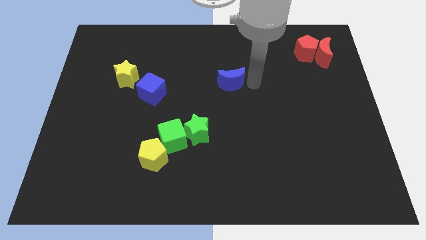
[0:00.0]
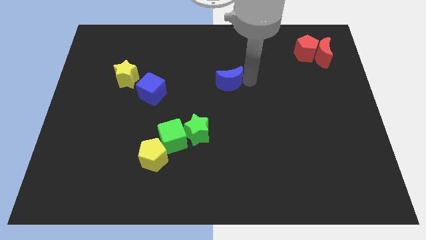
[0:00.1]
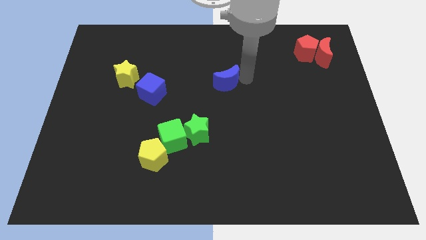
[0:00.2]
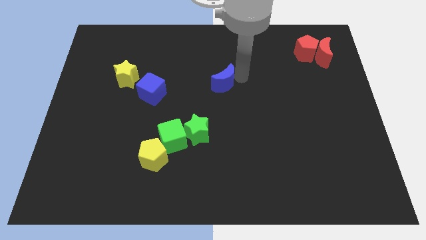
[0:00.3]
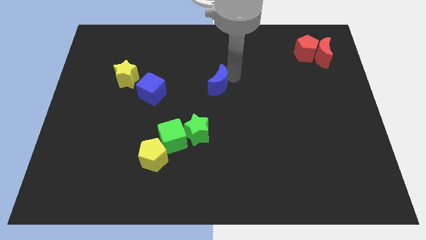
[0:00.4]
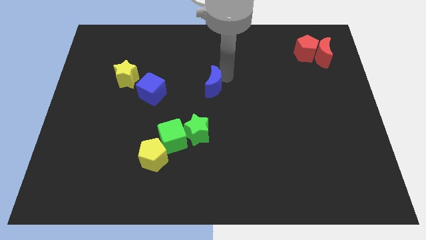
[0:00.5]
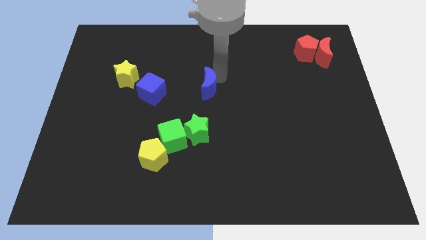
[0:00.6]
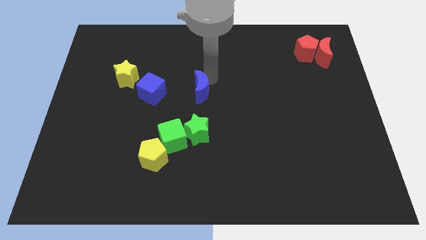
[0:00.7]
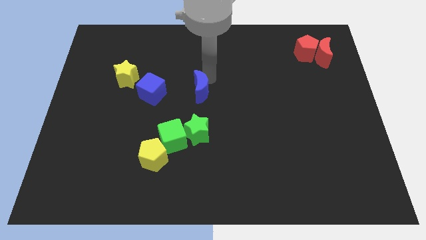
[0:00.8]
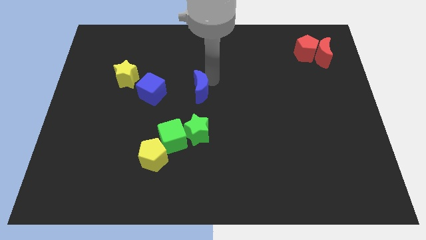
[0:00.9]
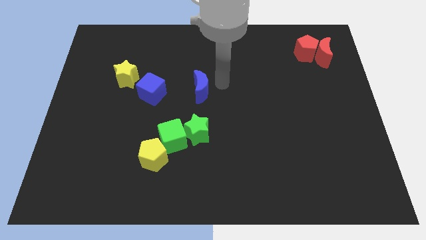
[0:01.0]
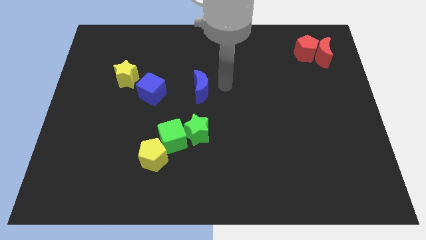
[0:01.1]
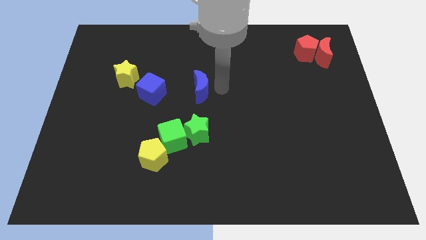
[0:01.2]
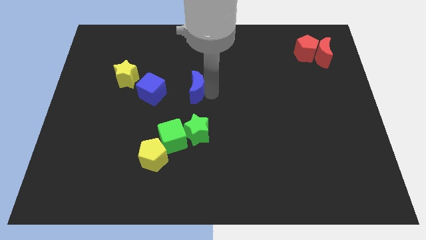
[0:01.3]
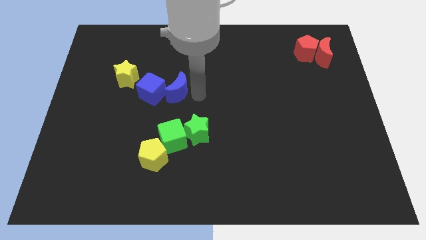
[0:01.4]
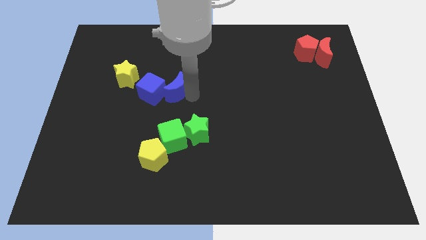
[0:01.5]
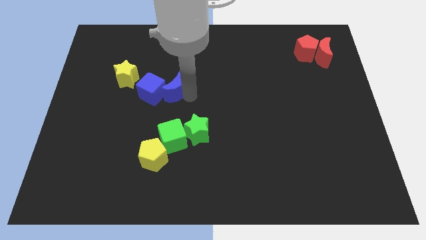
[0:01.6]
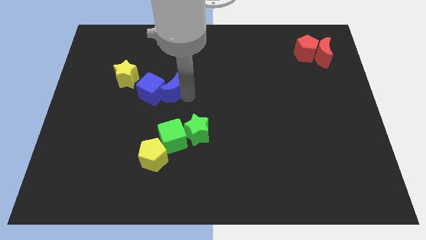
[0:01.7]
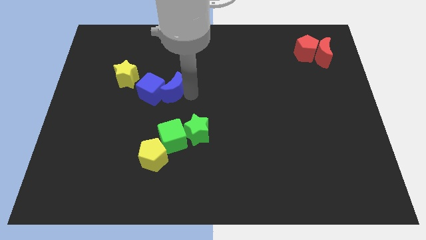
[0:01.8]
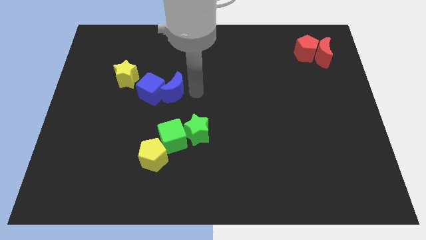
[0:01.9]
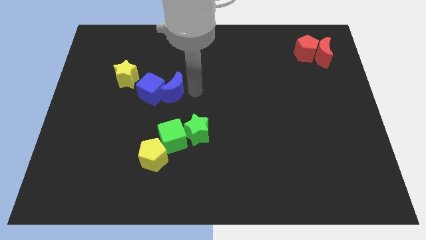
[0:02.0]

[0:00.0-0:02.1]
push the blue crescent to touch the blue cube

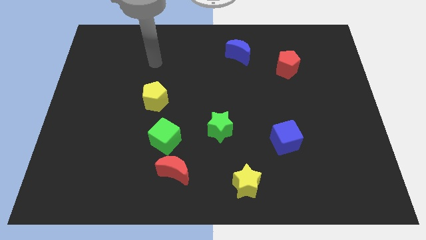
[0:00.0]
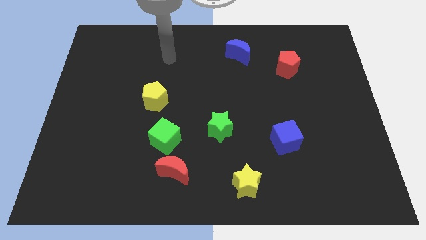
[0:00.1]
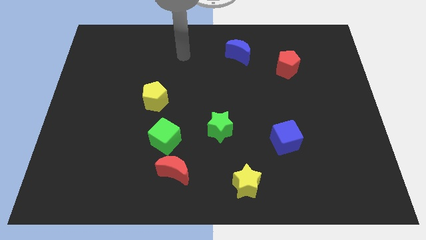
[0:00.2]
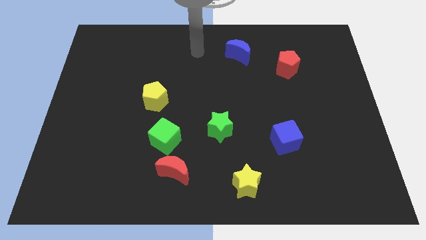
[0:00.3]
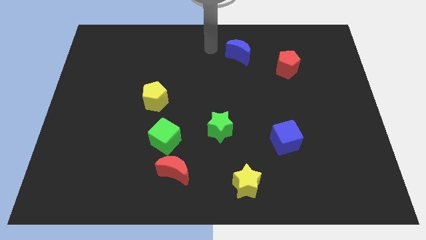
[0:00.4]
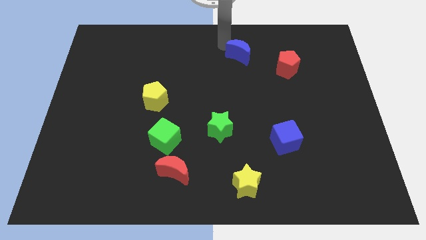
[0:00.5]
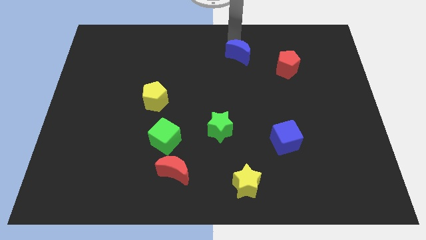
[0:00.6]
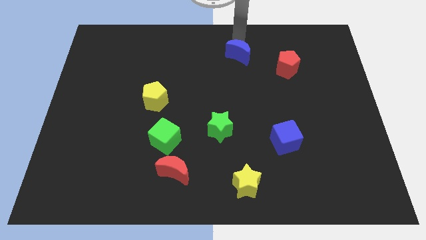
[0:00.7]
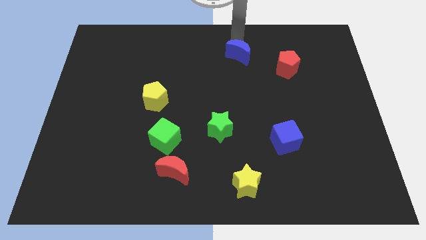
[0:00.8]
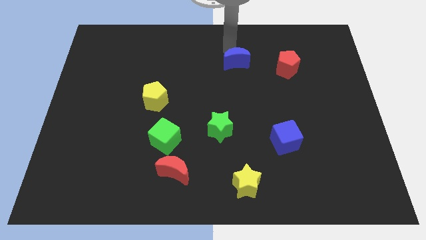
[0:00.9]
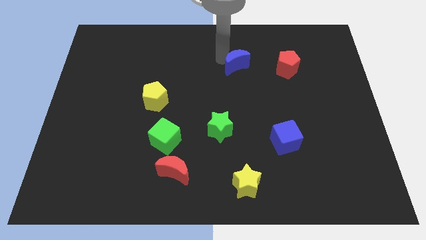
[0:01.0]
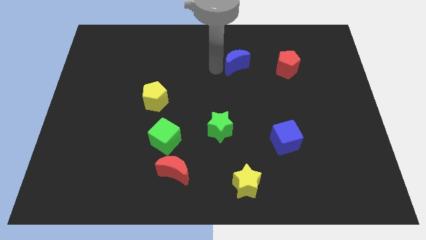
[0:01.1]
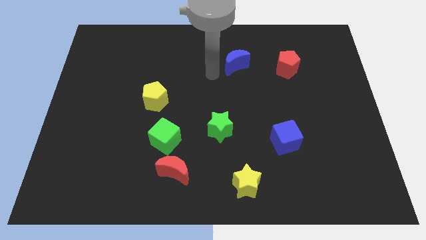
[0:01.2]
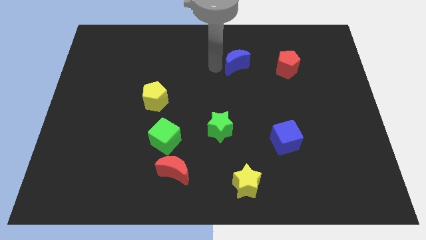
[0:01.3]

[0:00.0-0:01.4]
turn the blue moon down

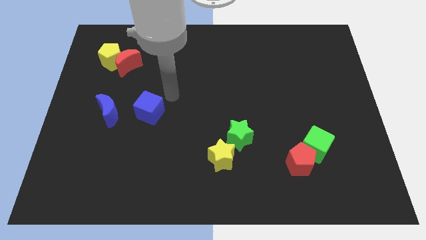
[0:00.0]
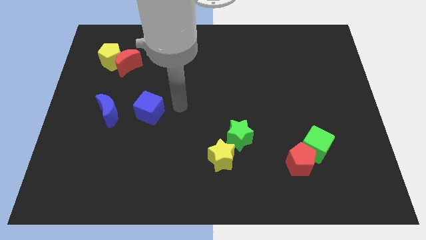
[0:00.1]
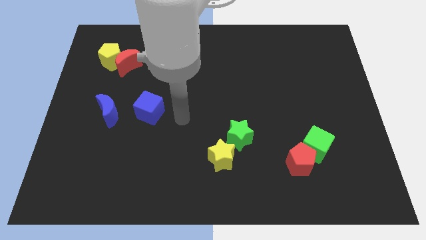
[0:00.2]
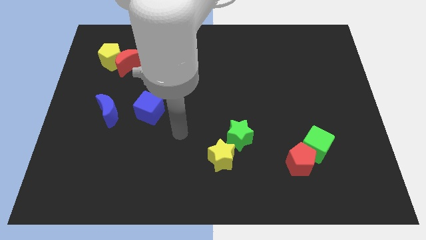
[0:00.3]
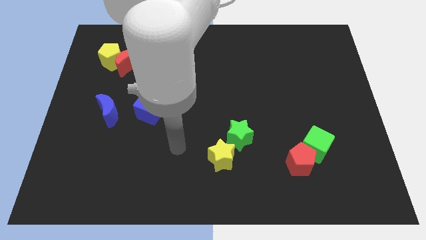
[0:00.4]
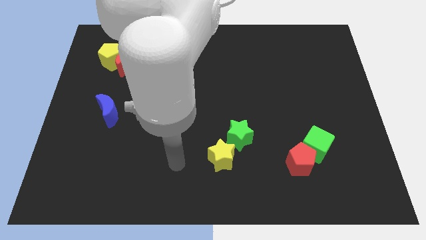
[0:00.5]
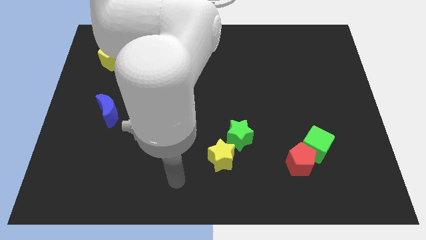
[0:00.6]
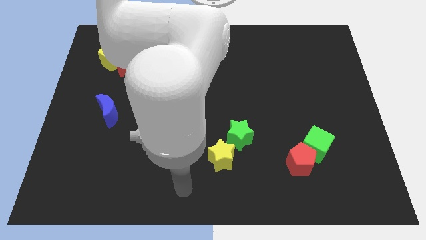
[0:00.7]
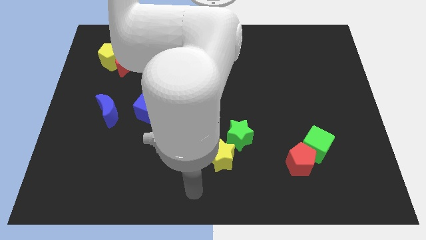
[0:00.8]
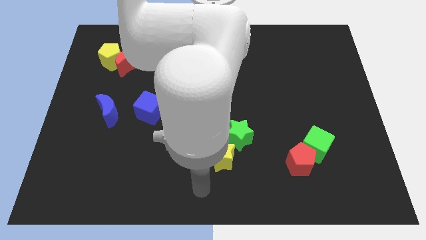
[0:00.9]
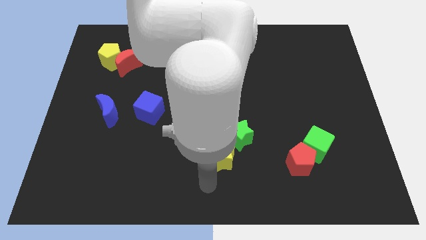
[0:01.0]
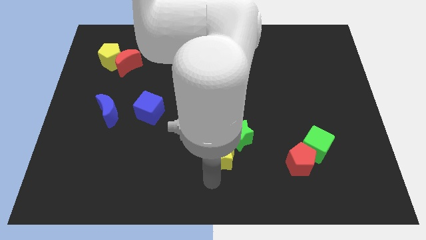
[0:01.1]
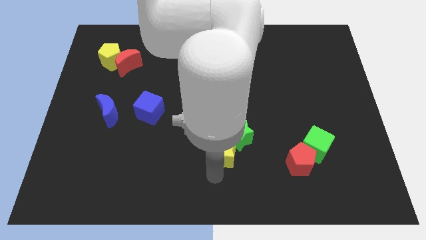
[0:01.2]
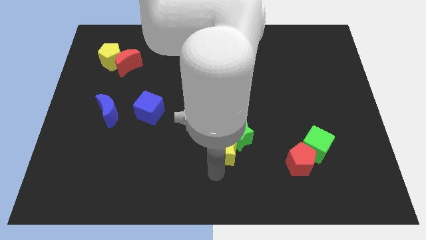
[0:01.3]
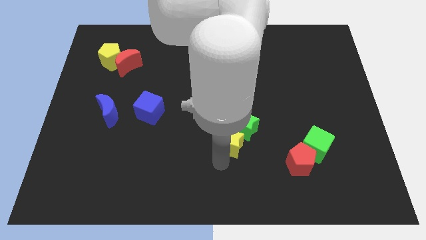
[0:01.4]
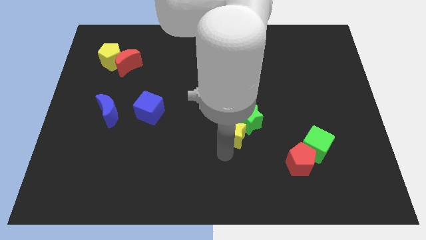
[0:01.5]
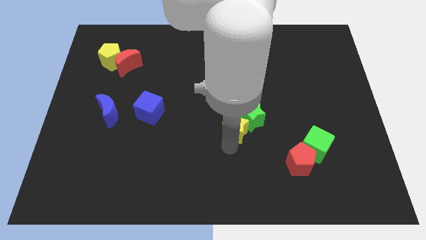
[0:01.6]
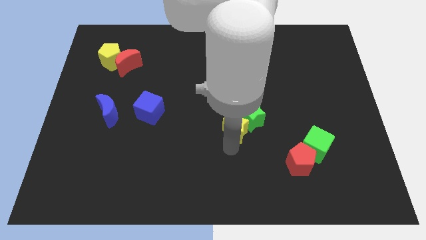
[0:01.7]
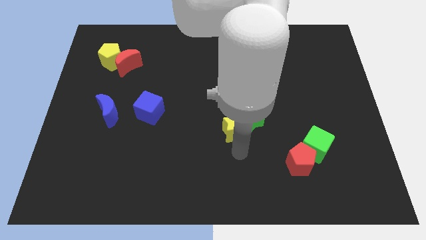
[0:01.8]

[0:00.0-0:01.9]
move the yellow star into the green star

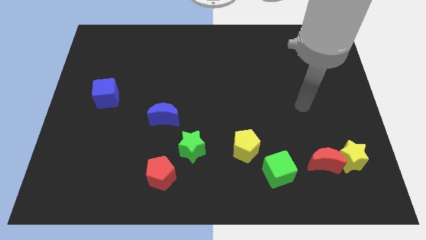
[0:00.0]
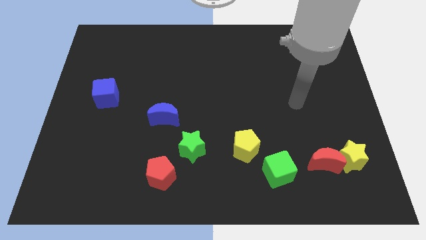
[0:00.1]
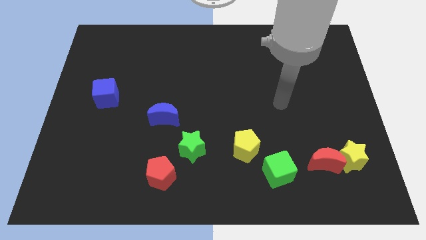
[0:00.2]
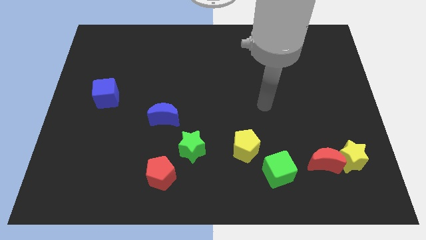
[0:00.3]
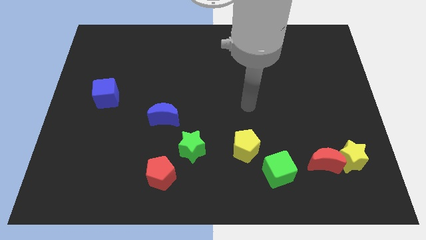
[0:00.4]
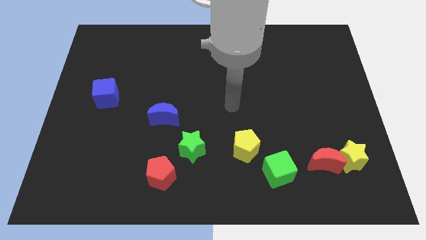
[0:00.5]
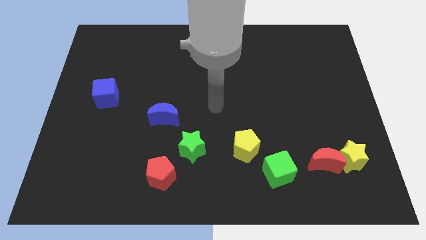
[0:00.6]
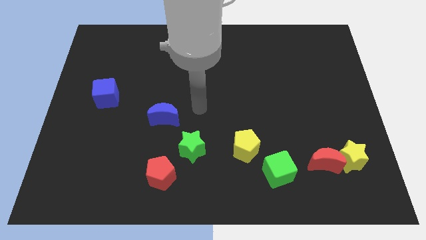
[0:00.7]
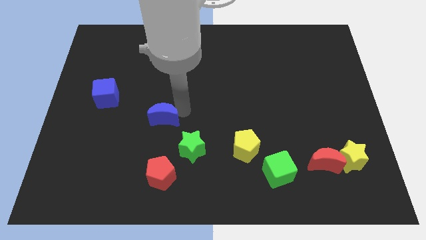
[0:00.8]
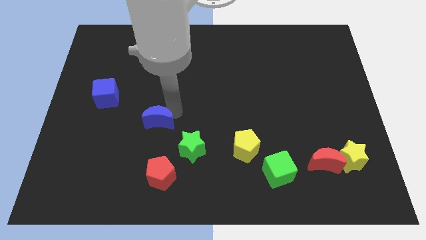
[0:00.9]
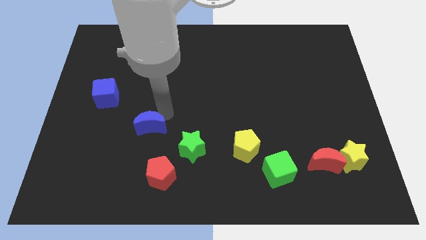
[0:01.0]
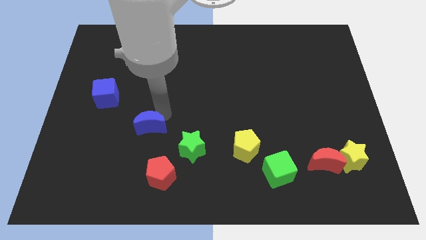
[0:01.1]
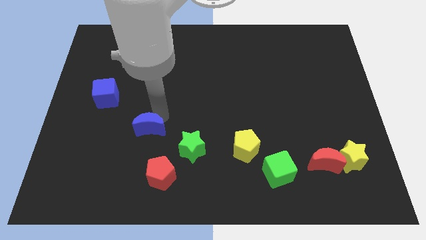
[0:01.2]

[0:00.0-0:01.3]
move your arm to the right of blue moon

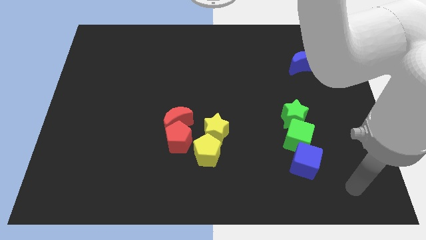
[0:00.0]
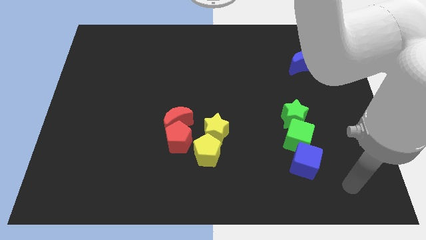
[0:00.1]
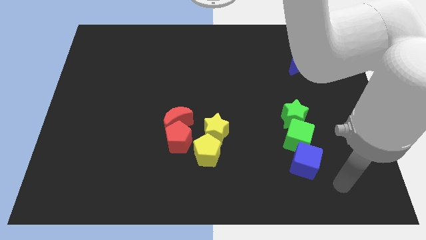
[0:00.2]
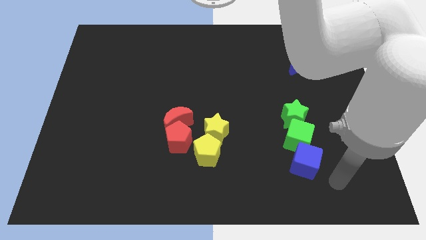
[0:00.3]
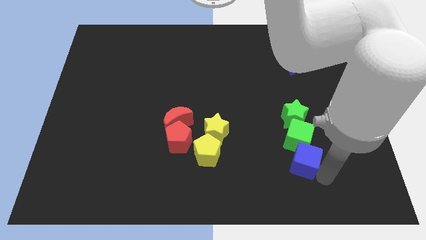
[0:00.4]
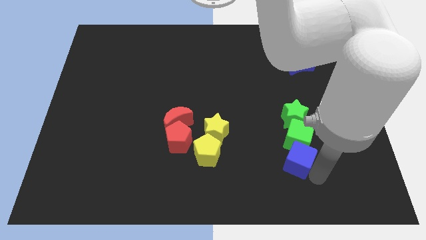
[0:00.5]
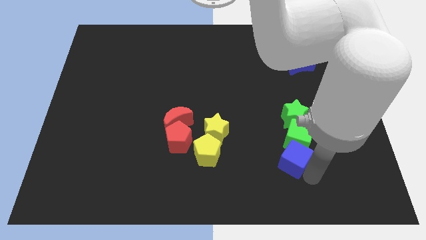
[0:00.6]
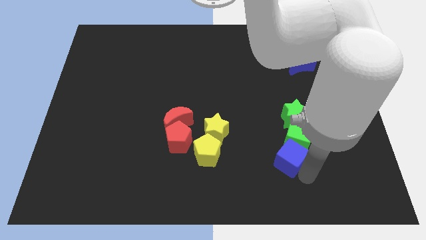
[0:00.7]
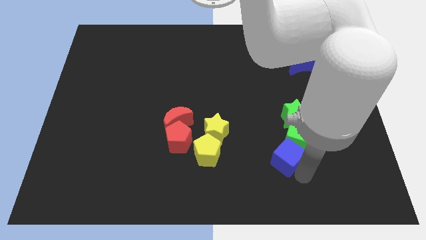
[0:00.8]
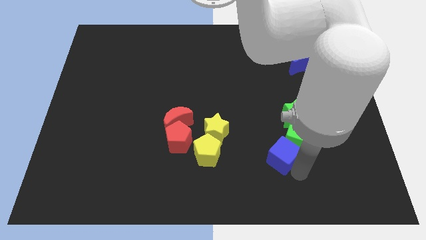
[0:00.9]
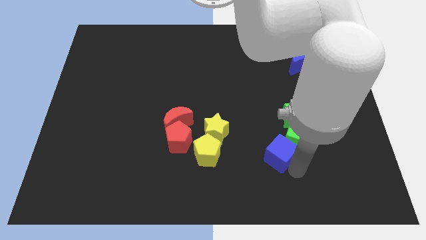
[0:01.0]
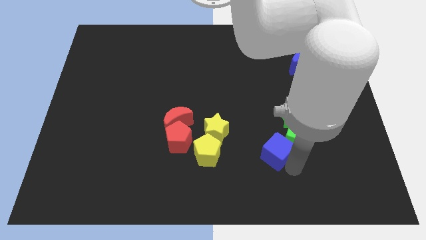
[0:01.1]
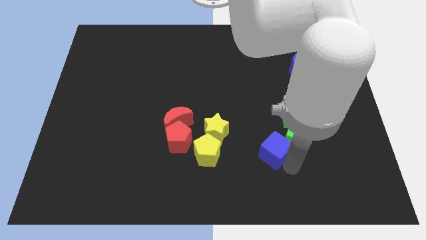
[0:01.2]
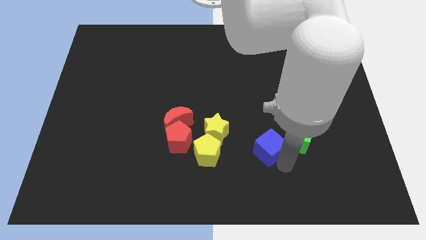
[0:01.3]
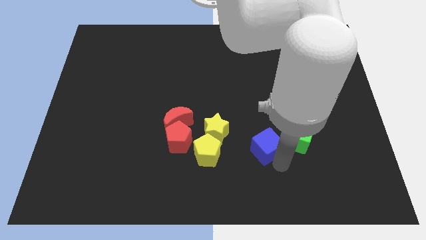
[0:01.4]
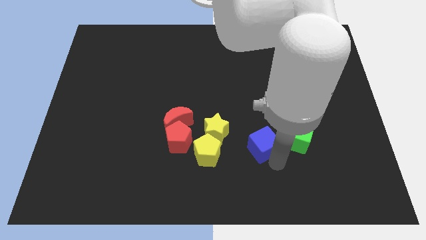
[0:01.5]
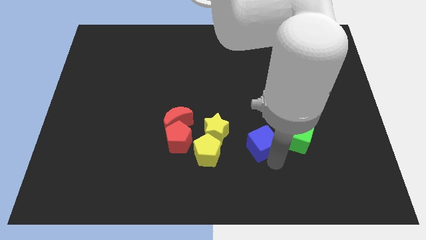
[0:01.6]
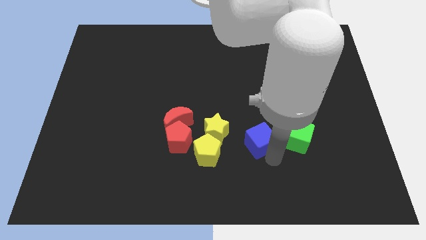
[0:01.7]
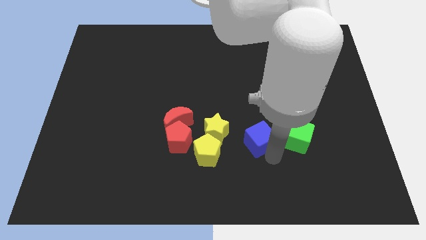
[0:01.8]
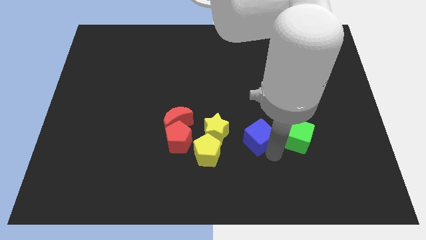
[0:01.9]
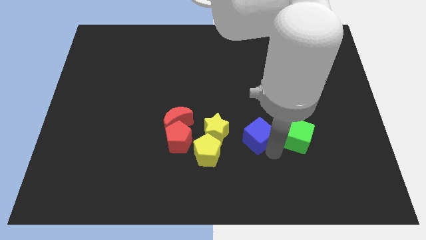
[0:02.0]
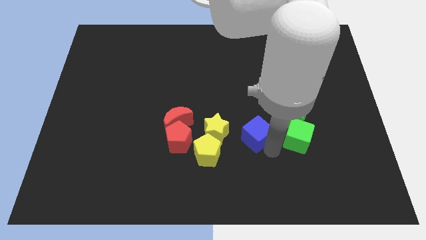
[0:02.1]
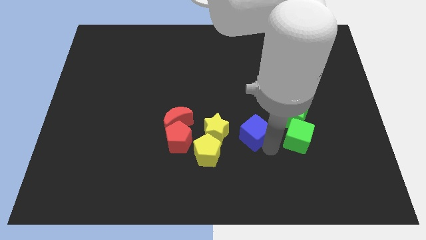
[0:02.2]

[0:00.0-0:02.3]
push the blue cube to the left of green cube

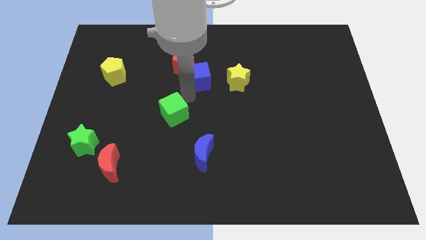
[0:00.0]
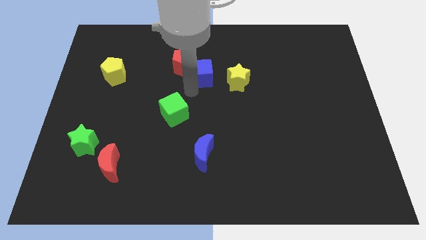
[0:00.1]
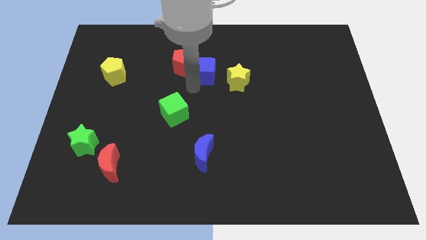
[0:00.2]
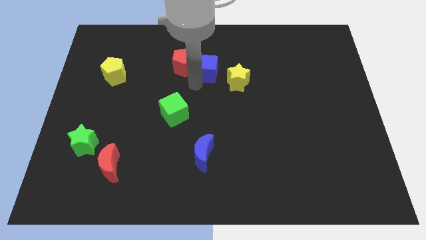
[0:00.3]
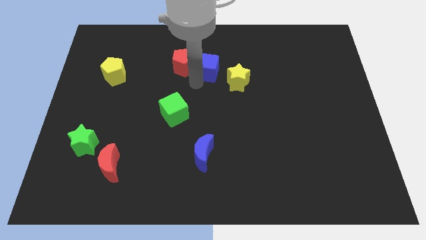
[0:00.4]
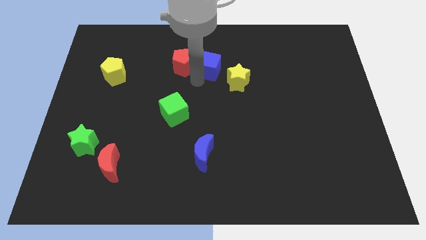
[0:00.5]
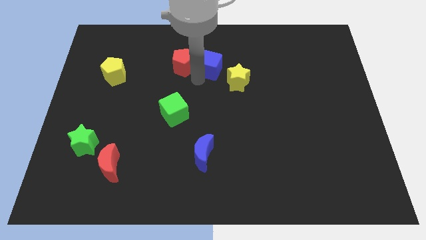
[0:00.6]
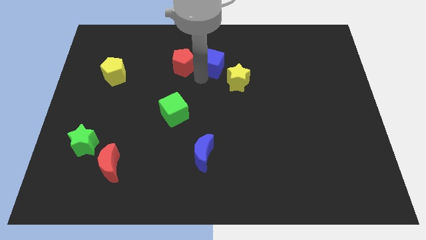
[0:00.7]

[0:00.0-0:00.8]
move blue cube in between yellow star and red pentagon
